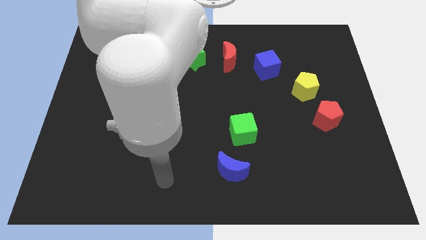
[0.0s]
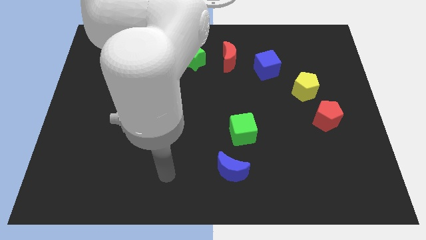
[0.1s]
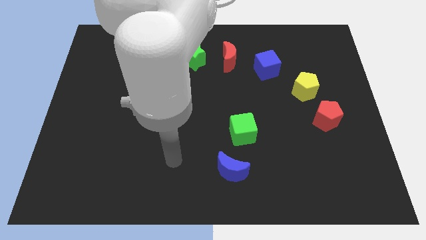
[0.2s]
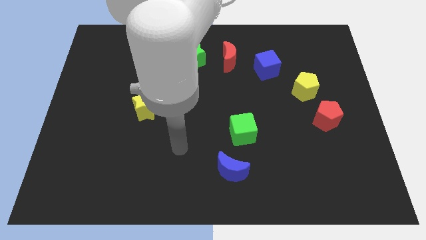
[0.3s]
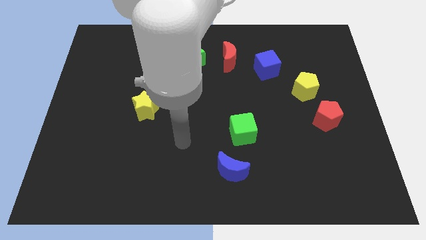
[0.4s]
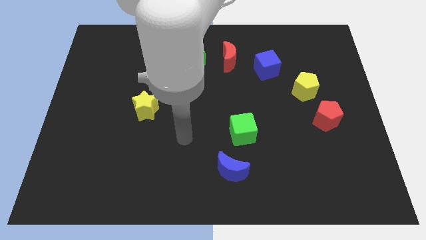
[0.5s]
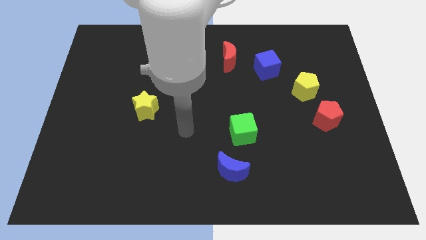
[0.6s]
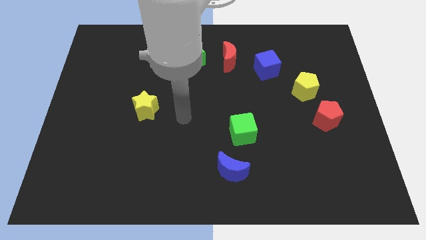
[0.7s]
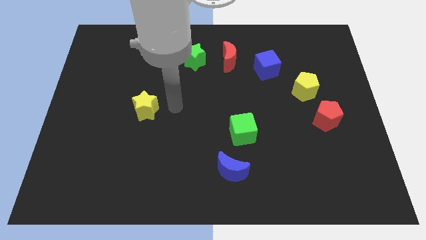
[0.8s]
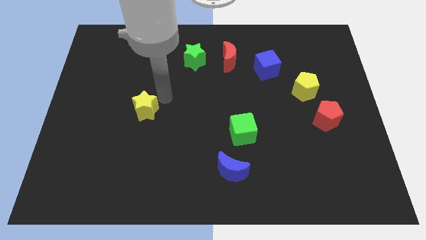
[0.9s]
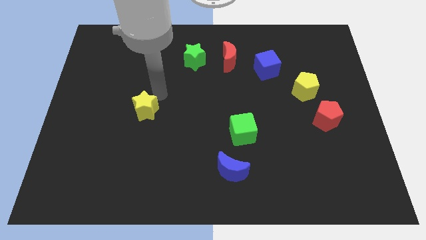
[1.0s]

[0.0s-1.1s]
place arm above the yellow star

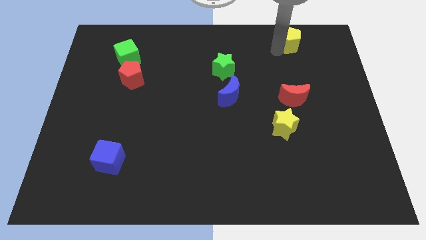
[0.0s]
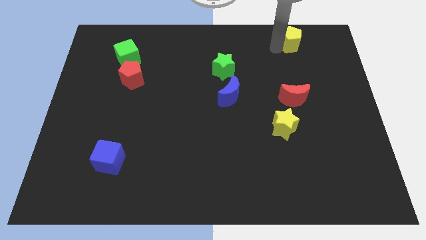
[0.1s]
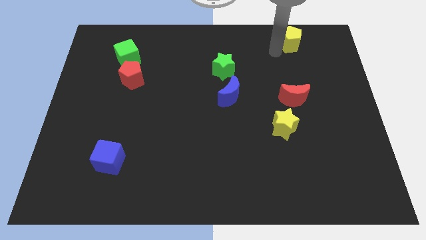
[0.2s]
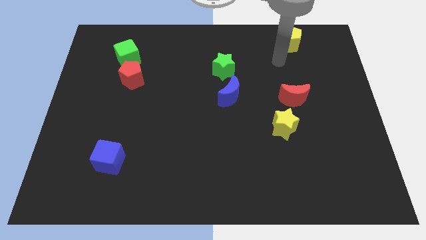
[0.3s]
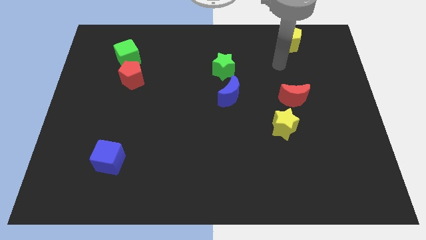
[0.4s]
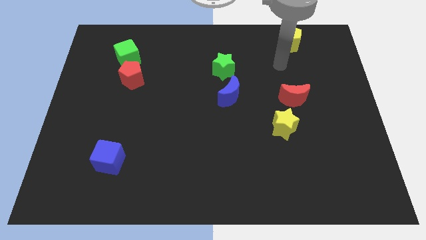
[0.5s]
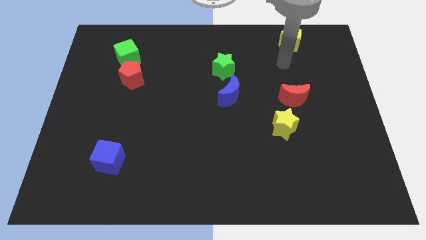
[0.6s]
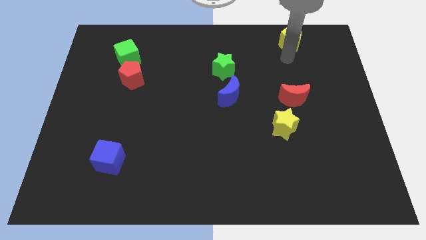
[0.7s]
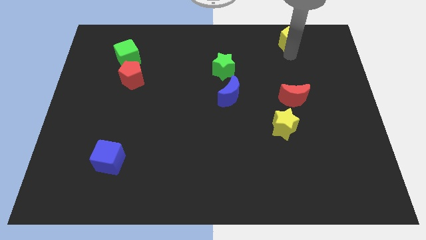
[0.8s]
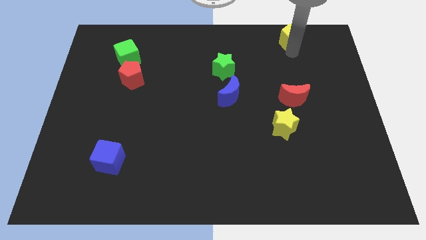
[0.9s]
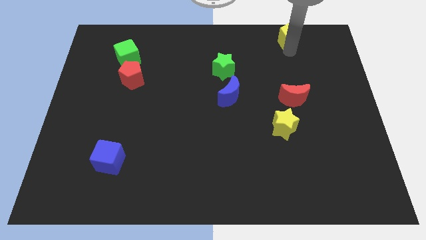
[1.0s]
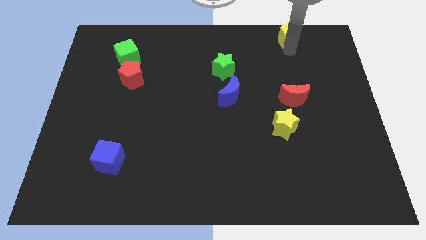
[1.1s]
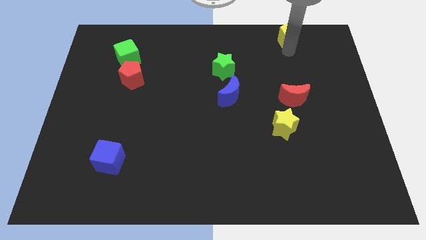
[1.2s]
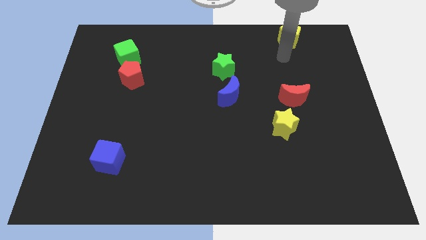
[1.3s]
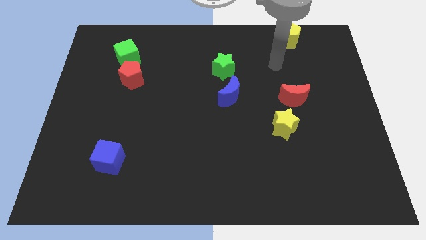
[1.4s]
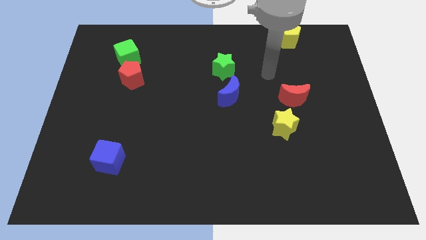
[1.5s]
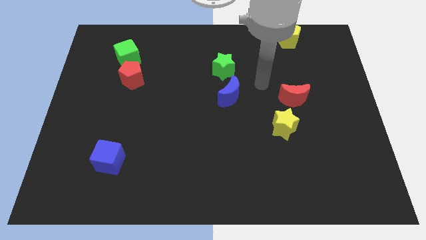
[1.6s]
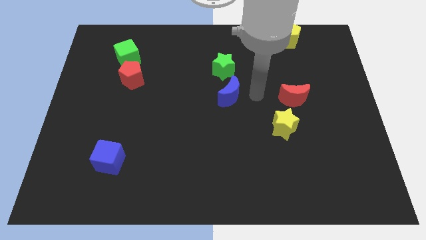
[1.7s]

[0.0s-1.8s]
move yellow pentagon to top side of the board

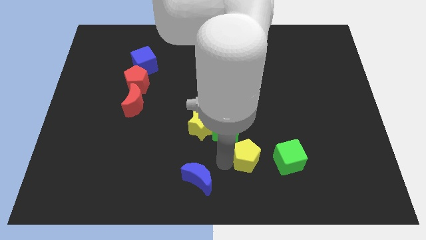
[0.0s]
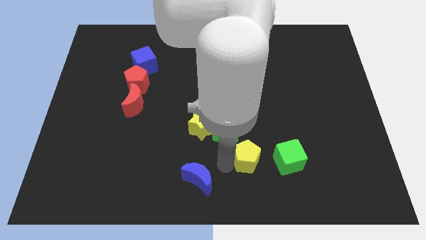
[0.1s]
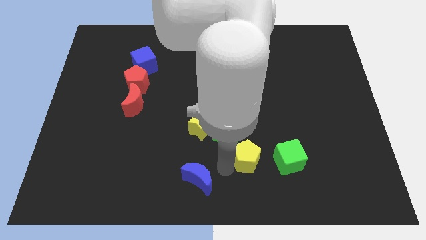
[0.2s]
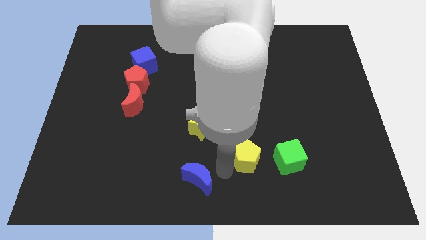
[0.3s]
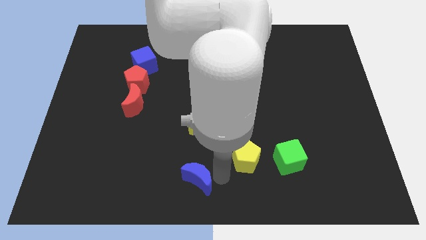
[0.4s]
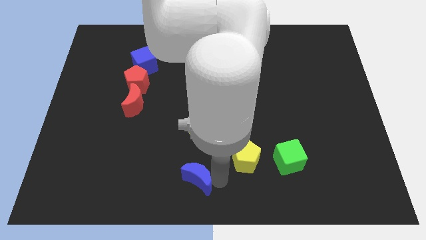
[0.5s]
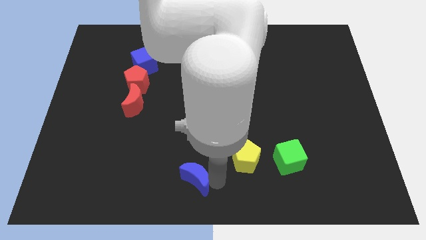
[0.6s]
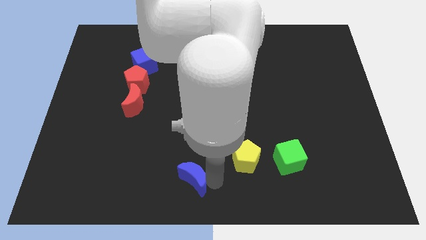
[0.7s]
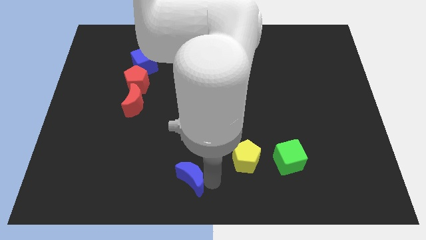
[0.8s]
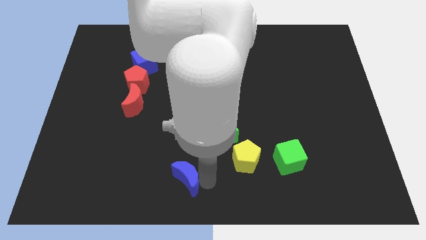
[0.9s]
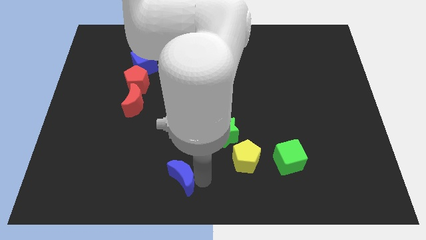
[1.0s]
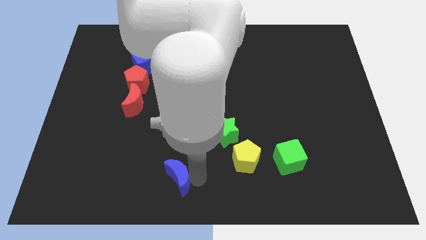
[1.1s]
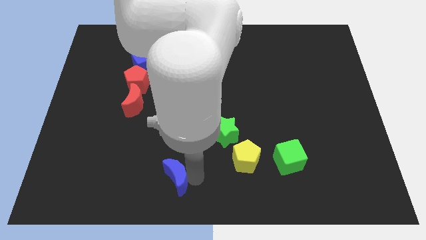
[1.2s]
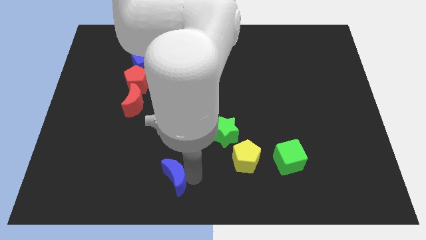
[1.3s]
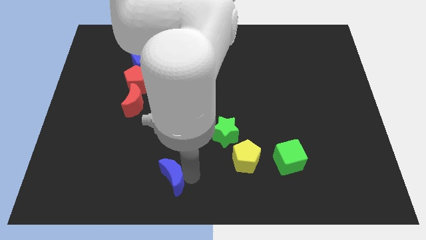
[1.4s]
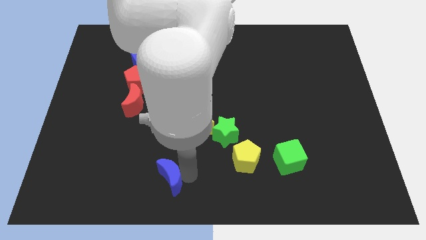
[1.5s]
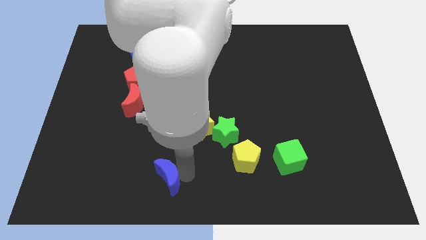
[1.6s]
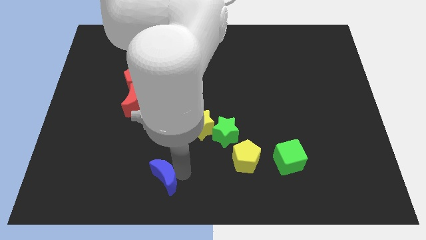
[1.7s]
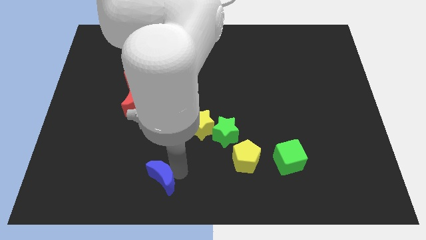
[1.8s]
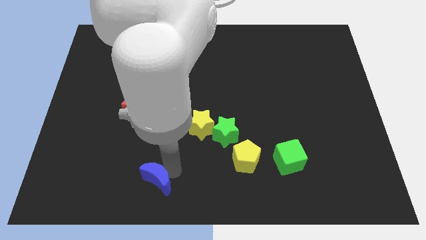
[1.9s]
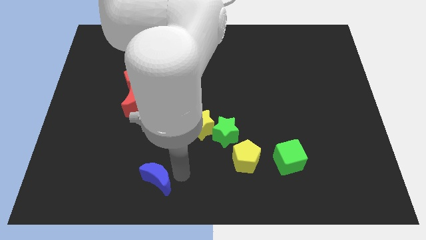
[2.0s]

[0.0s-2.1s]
move the blue crescent to the left side of the table

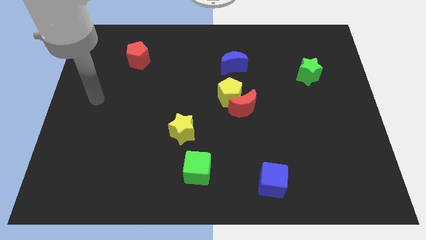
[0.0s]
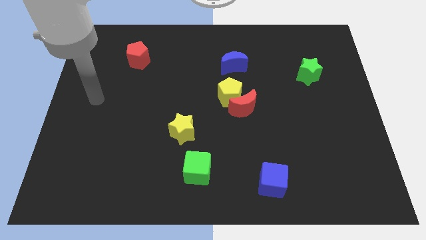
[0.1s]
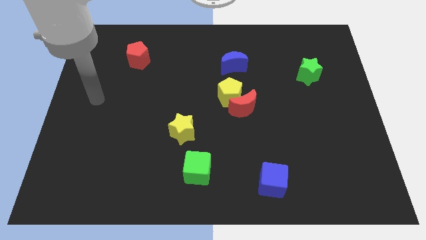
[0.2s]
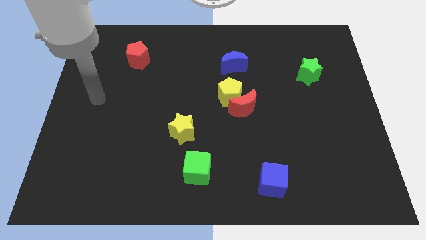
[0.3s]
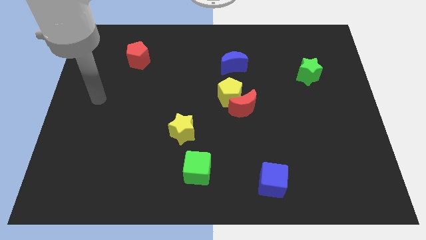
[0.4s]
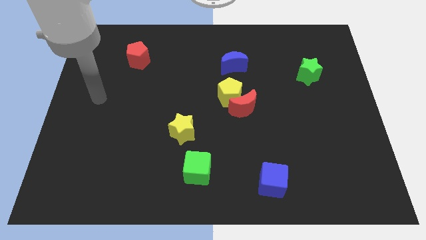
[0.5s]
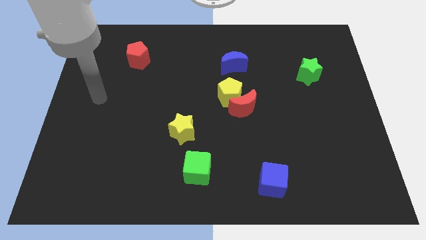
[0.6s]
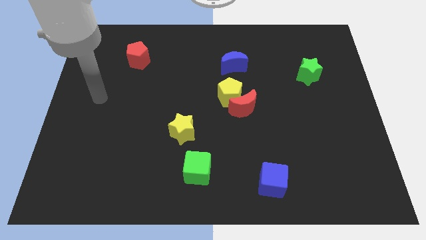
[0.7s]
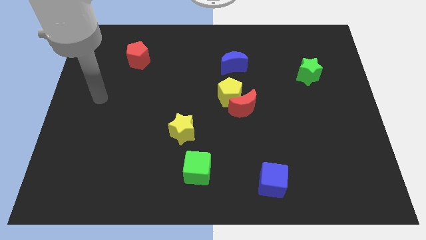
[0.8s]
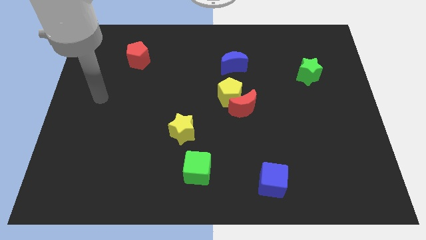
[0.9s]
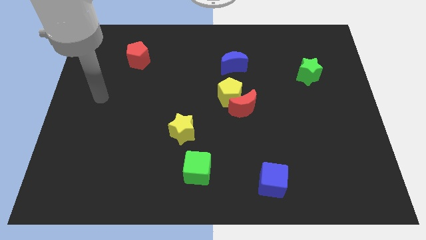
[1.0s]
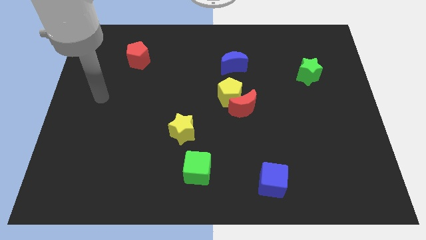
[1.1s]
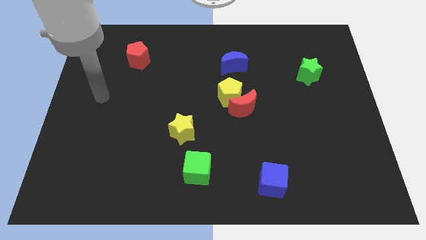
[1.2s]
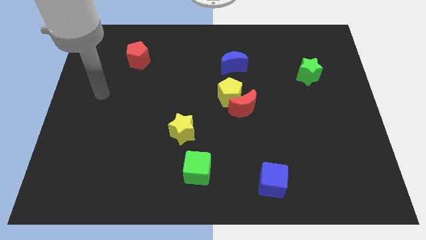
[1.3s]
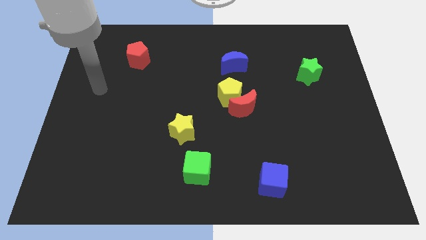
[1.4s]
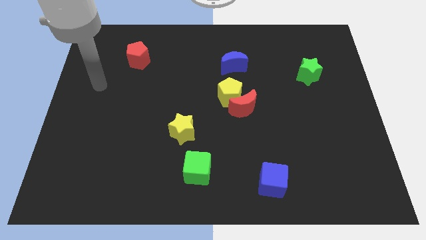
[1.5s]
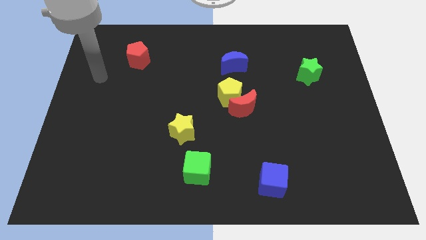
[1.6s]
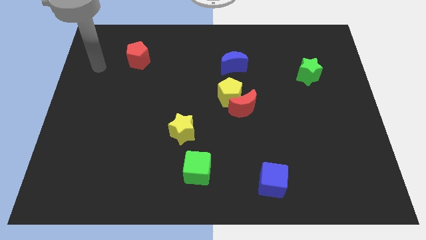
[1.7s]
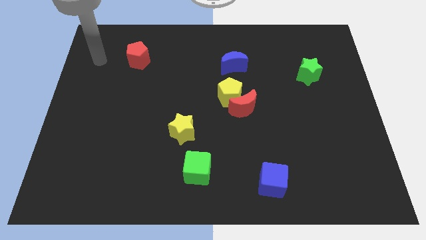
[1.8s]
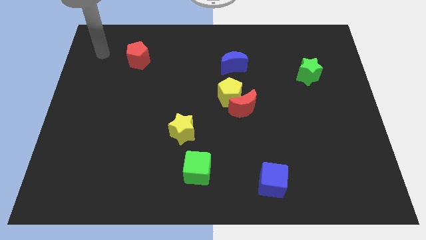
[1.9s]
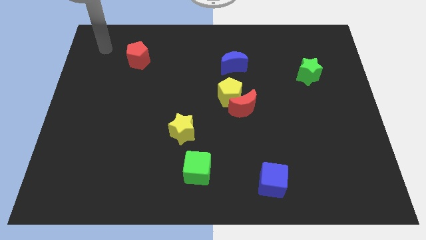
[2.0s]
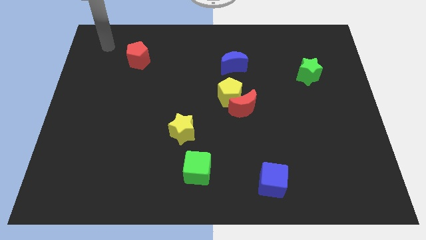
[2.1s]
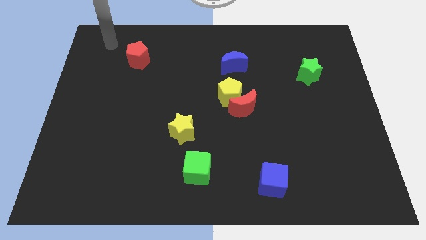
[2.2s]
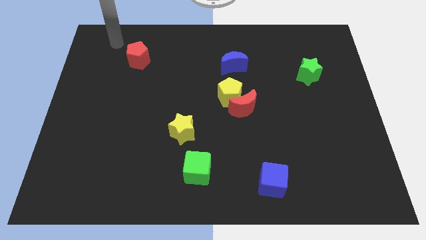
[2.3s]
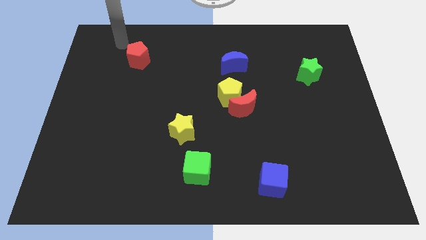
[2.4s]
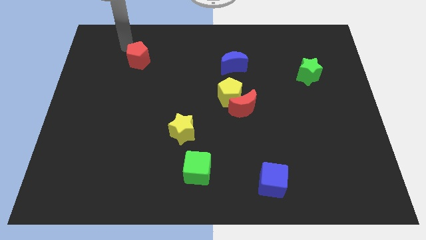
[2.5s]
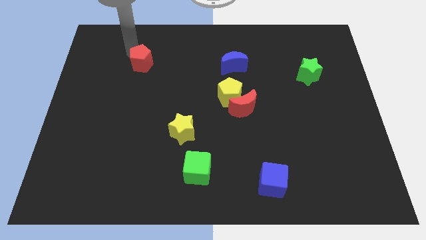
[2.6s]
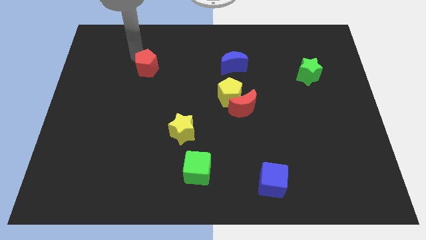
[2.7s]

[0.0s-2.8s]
move your arm near red pentagon

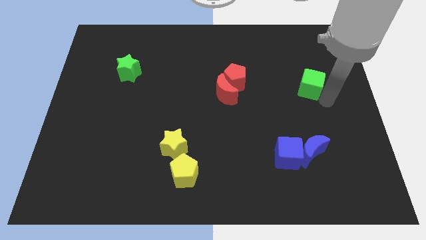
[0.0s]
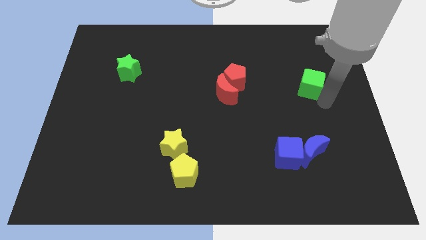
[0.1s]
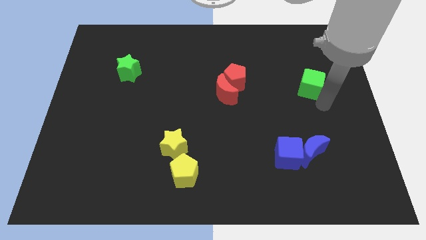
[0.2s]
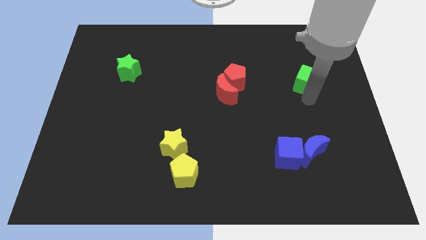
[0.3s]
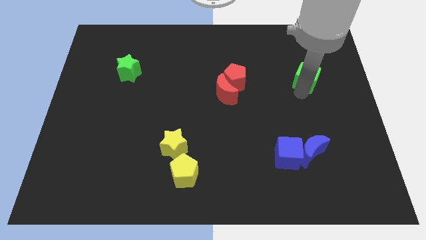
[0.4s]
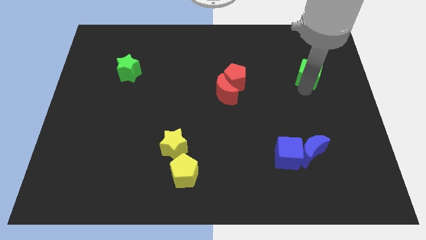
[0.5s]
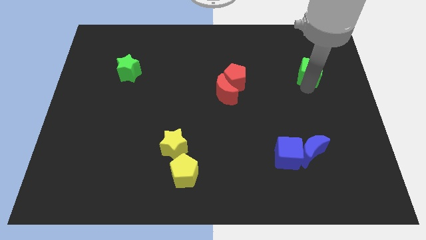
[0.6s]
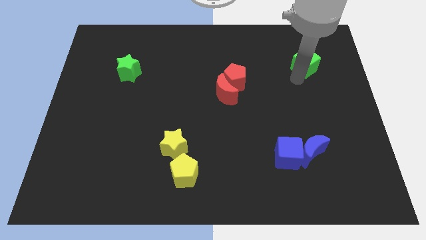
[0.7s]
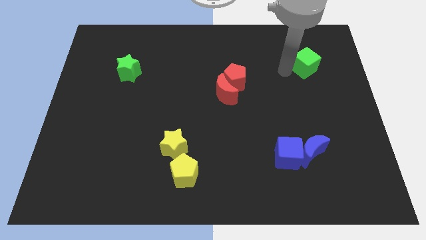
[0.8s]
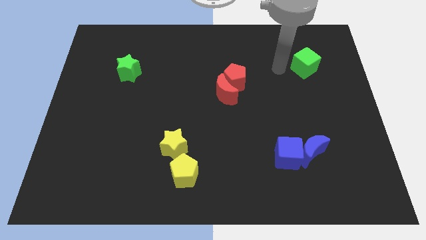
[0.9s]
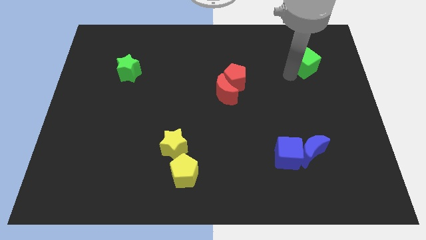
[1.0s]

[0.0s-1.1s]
move the green cube upwards

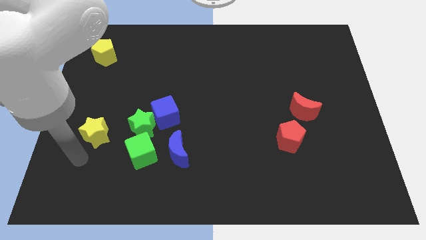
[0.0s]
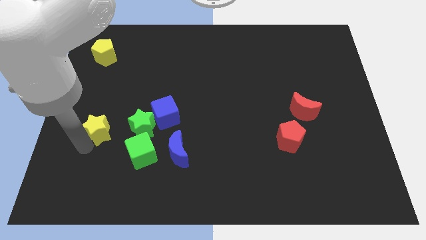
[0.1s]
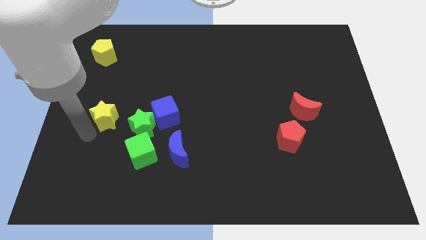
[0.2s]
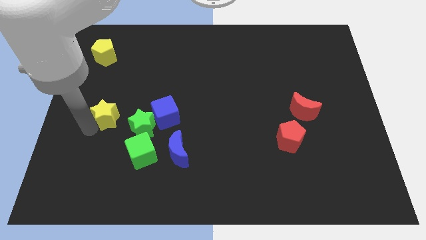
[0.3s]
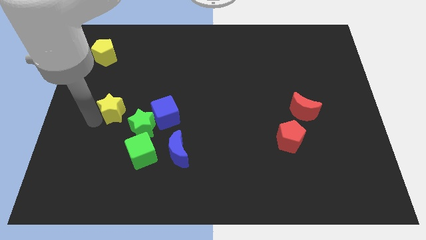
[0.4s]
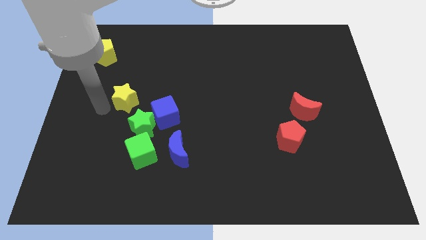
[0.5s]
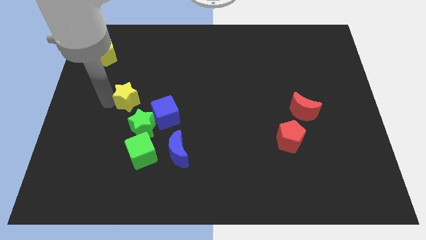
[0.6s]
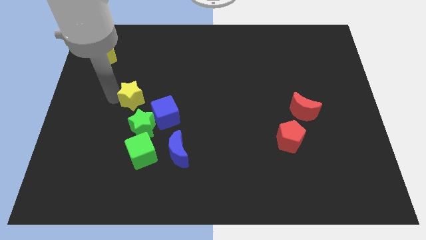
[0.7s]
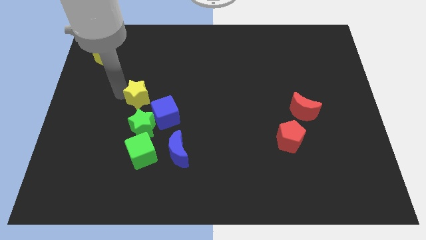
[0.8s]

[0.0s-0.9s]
push the yellow star upward
